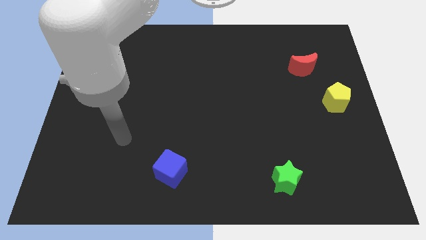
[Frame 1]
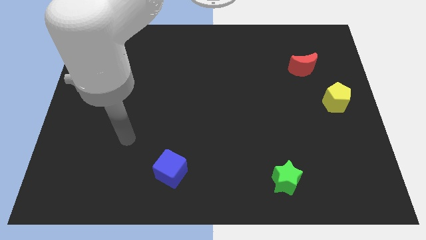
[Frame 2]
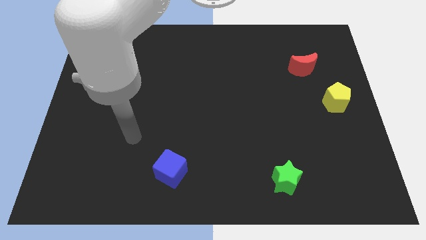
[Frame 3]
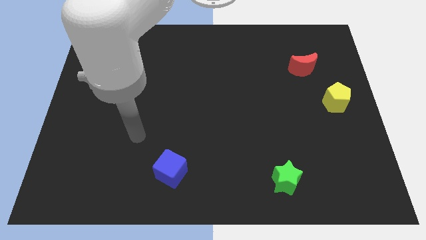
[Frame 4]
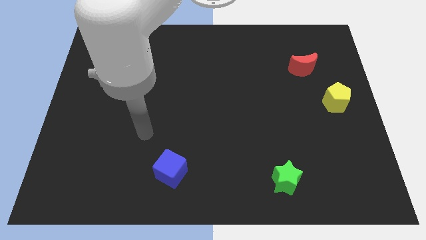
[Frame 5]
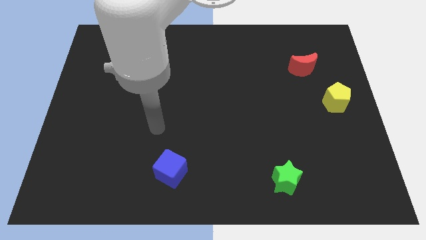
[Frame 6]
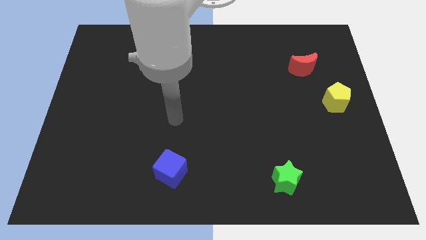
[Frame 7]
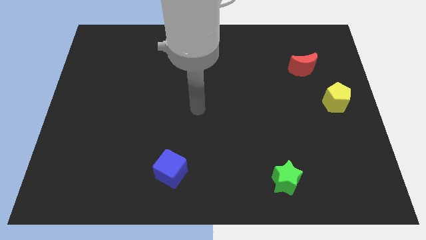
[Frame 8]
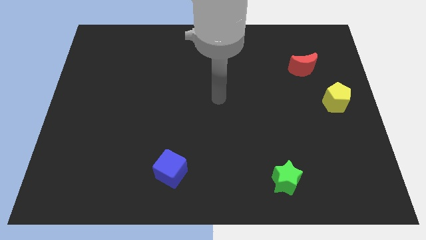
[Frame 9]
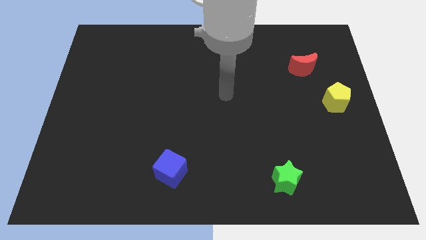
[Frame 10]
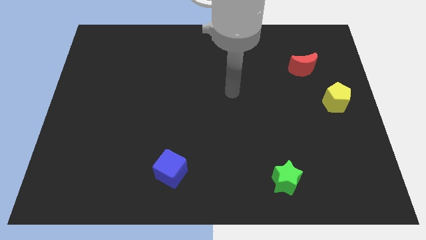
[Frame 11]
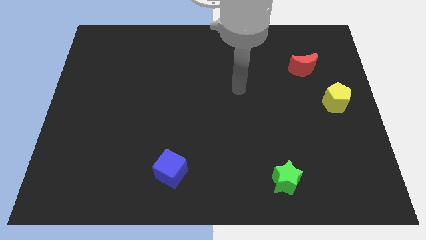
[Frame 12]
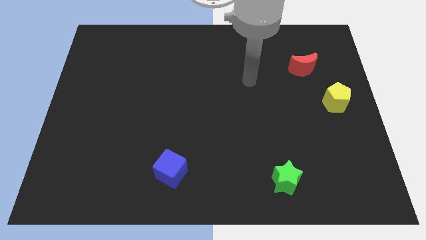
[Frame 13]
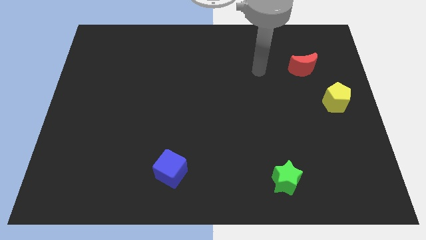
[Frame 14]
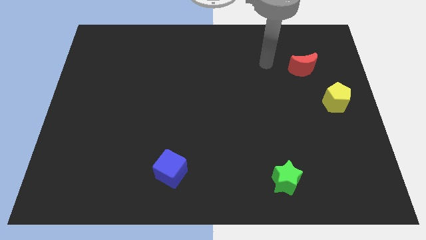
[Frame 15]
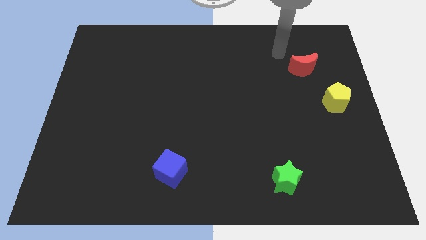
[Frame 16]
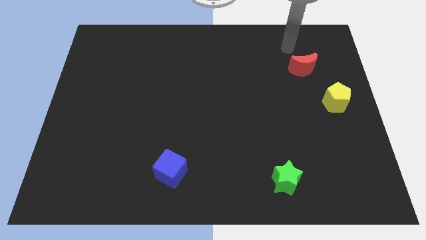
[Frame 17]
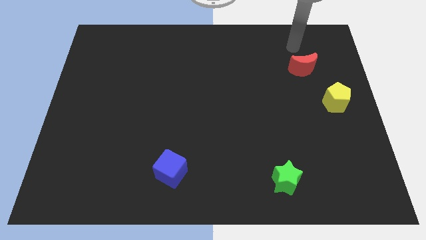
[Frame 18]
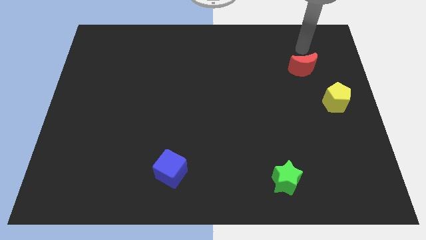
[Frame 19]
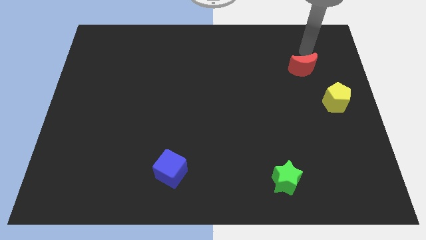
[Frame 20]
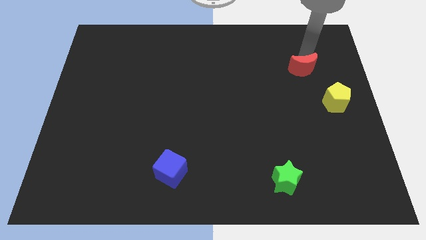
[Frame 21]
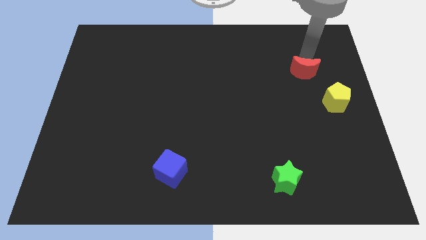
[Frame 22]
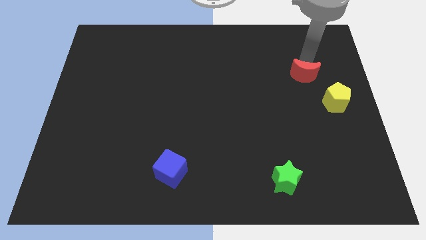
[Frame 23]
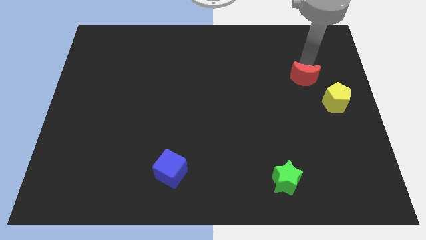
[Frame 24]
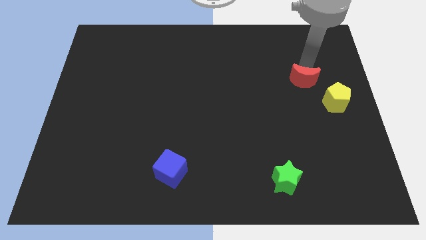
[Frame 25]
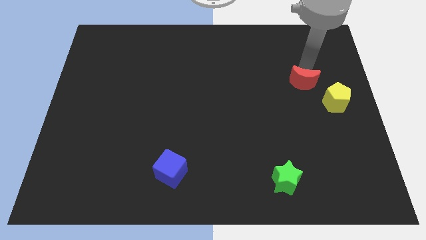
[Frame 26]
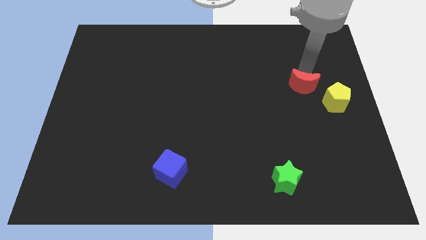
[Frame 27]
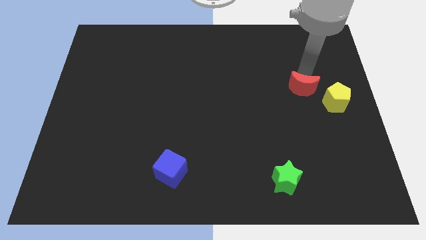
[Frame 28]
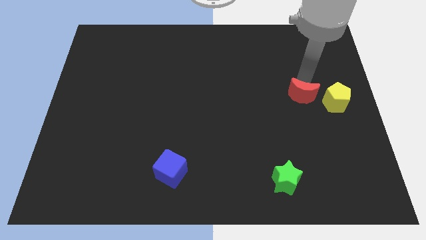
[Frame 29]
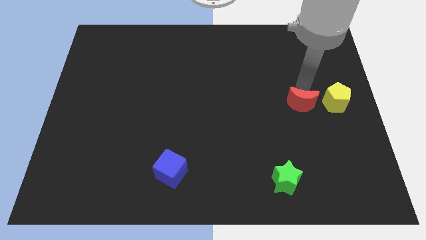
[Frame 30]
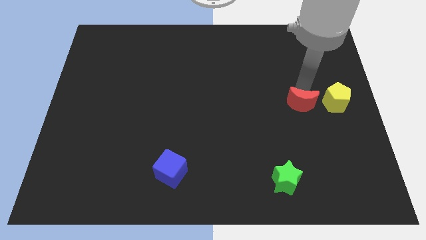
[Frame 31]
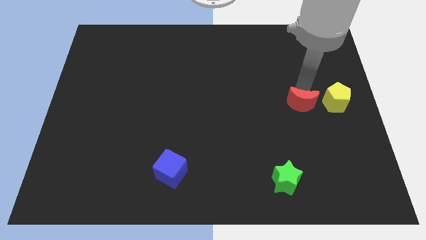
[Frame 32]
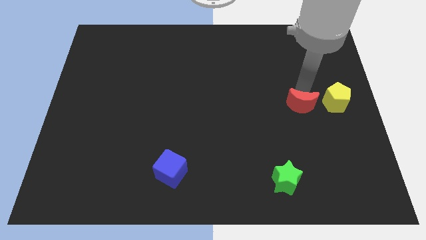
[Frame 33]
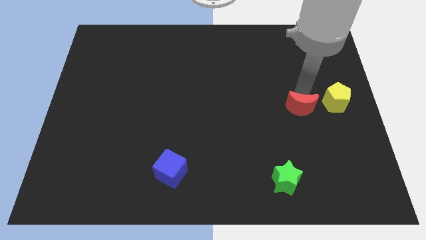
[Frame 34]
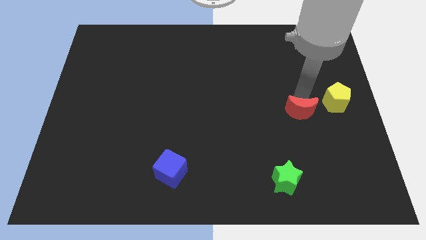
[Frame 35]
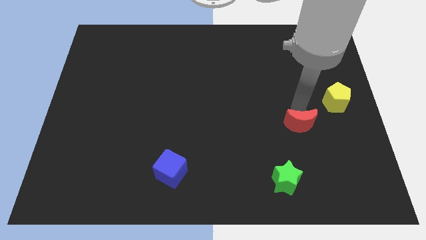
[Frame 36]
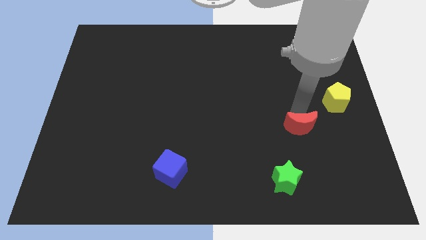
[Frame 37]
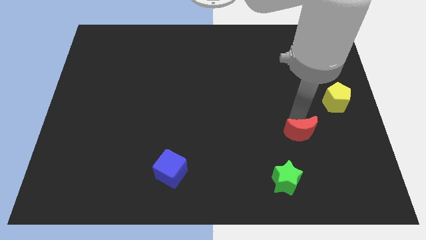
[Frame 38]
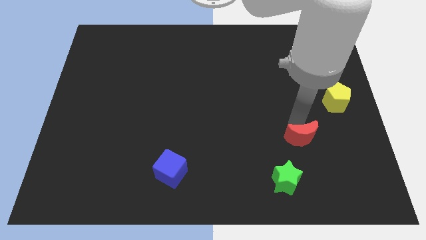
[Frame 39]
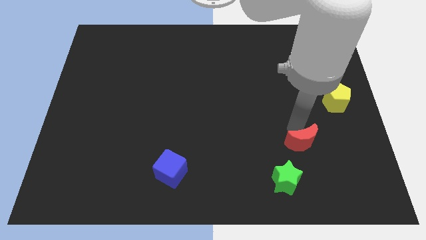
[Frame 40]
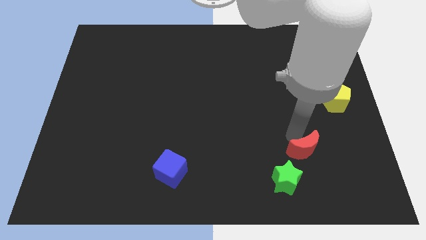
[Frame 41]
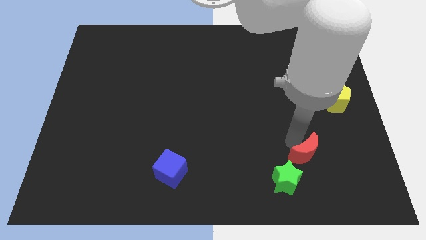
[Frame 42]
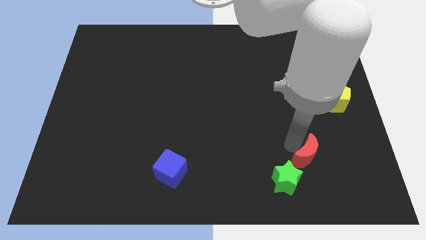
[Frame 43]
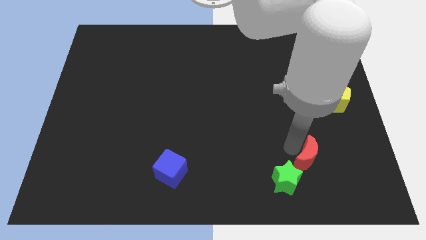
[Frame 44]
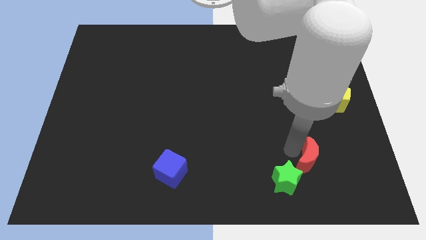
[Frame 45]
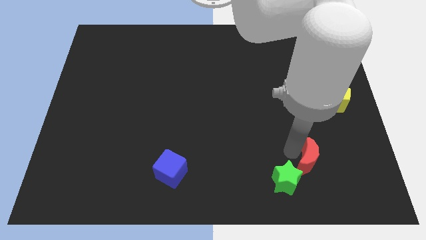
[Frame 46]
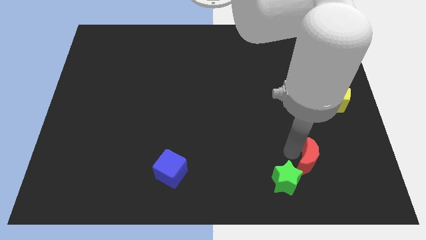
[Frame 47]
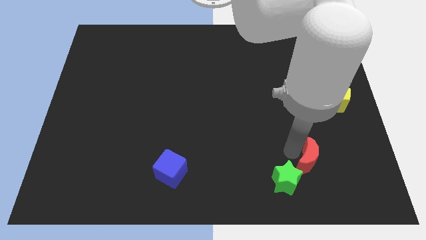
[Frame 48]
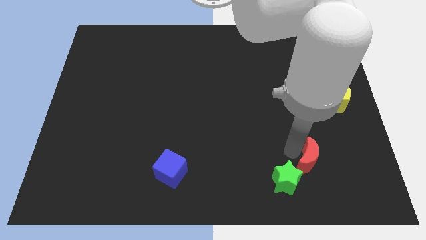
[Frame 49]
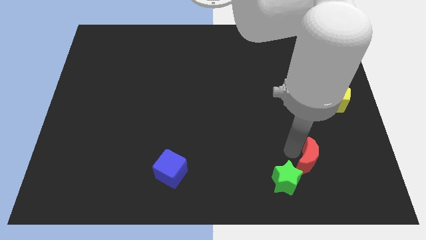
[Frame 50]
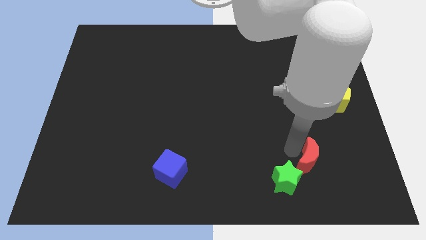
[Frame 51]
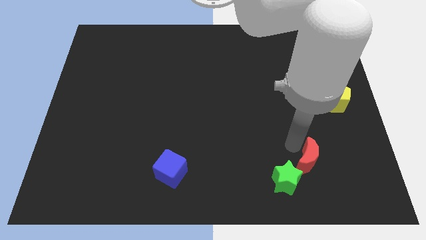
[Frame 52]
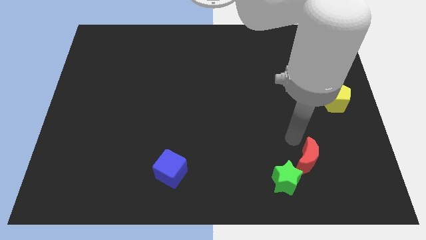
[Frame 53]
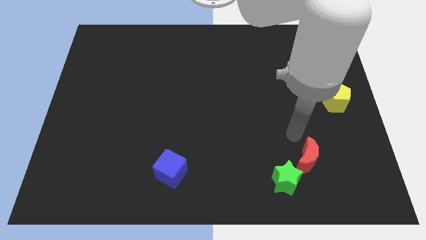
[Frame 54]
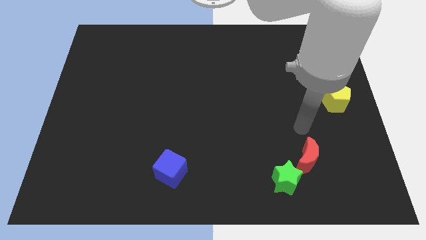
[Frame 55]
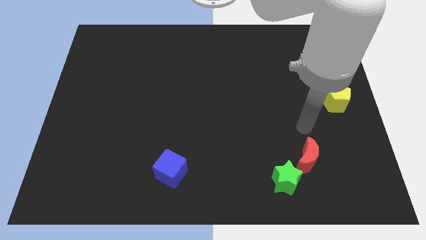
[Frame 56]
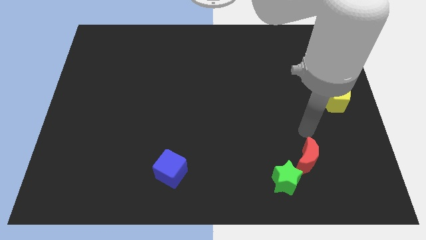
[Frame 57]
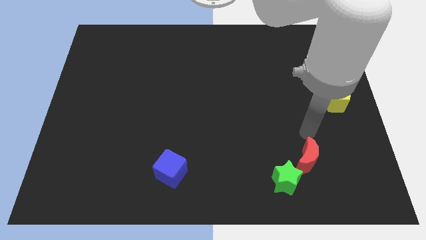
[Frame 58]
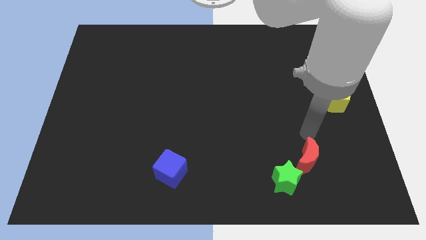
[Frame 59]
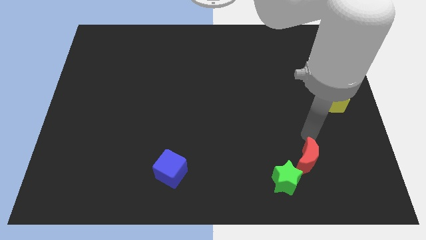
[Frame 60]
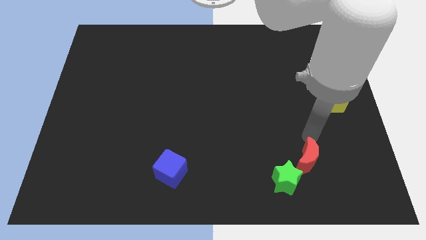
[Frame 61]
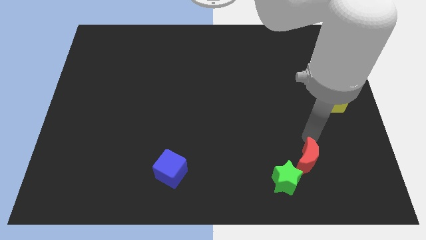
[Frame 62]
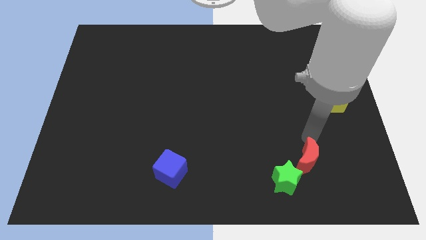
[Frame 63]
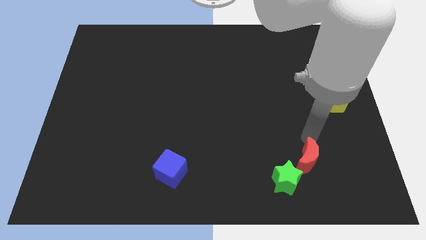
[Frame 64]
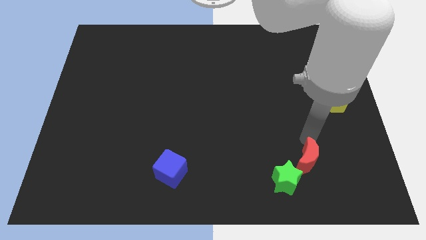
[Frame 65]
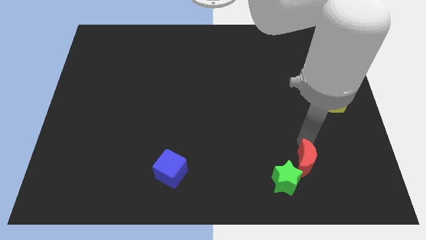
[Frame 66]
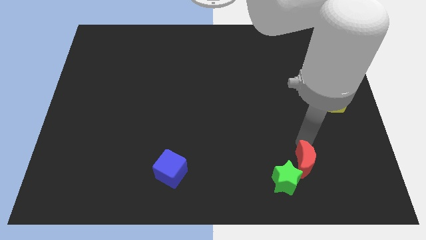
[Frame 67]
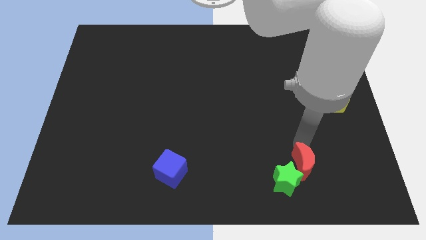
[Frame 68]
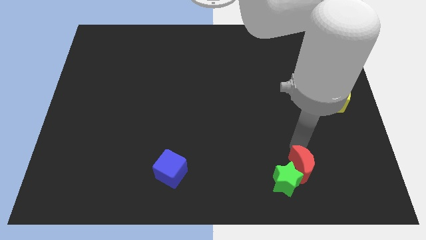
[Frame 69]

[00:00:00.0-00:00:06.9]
put the moon towards the star

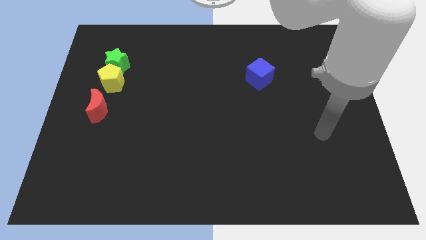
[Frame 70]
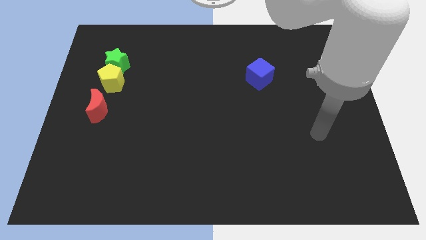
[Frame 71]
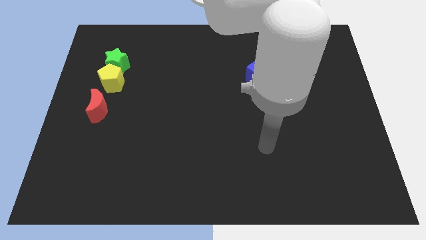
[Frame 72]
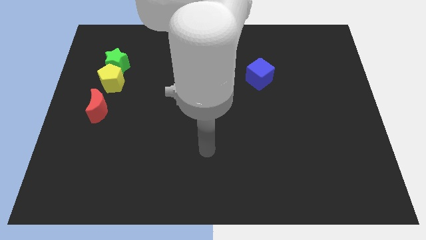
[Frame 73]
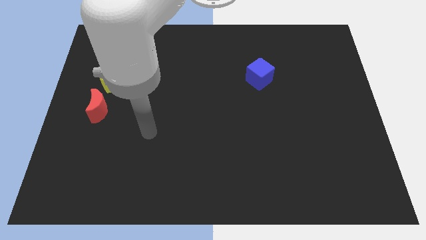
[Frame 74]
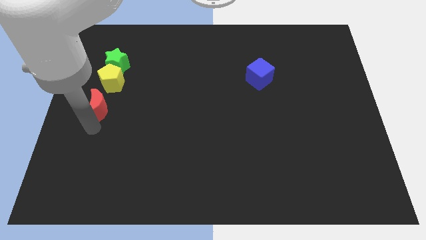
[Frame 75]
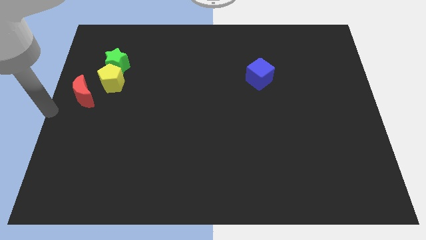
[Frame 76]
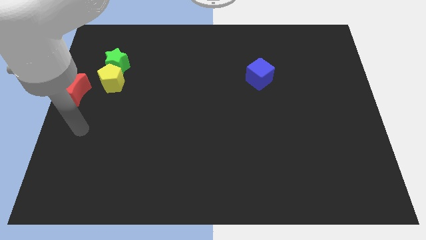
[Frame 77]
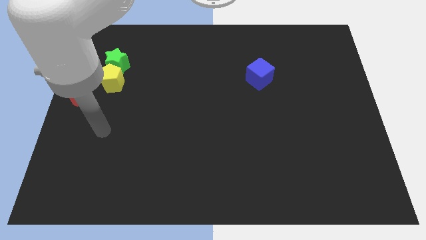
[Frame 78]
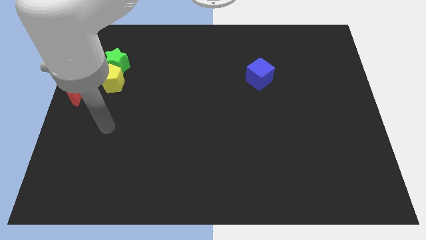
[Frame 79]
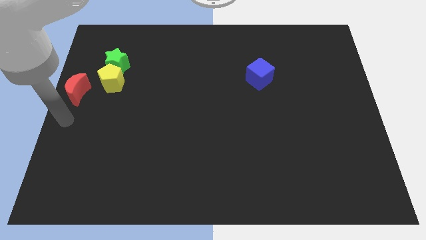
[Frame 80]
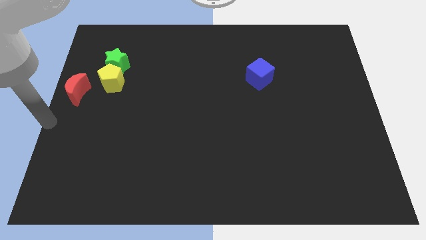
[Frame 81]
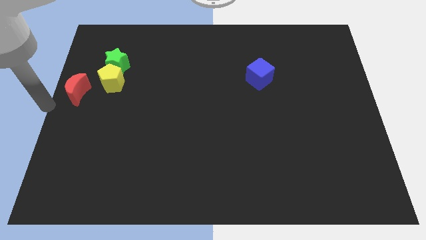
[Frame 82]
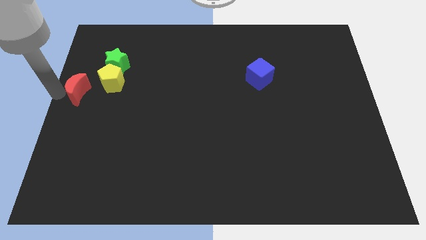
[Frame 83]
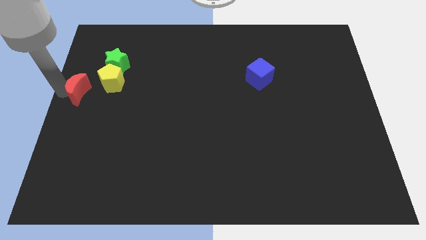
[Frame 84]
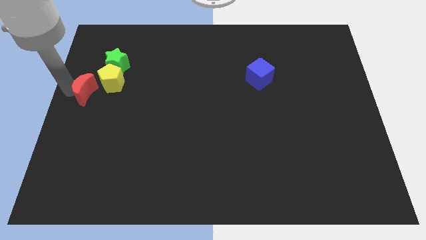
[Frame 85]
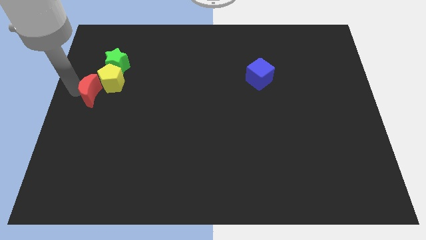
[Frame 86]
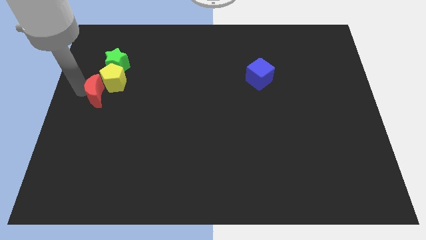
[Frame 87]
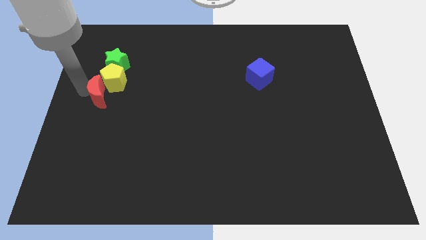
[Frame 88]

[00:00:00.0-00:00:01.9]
push the red moon close to the pentagon
